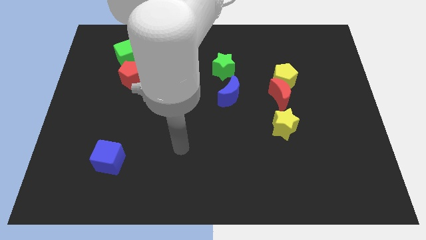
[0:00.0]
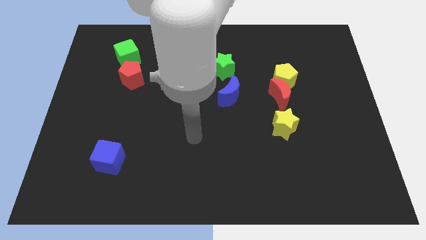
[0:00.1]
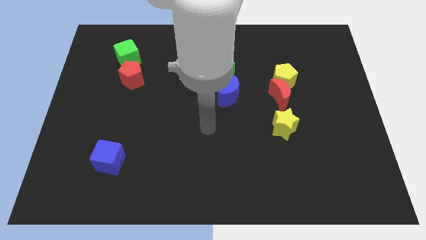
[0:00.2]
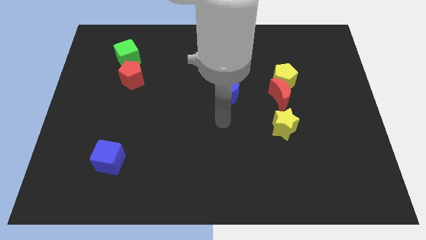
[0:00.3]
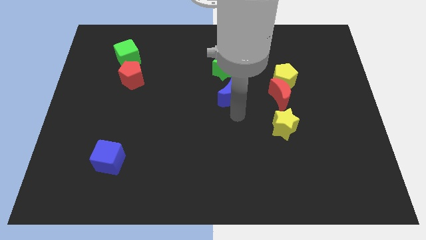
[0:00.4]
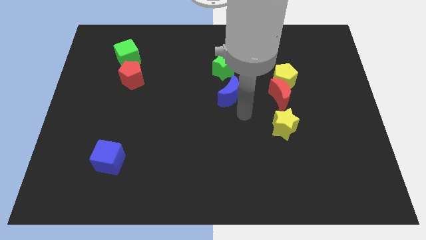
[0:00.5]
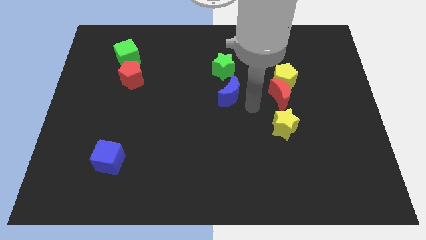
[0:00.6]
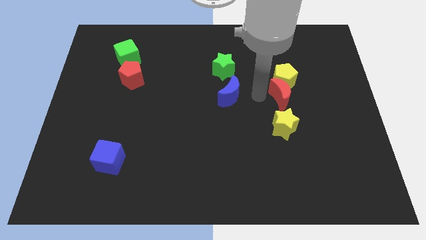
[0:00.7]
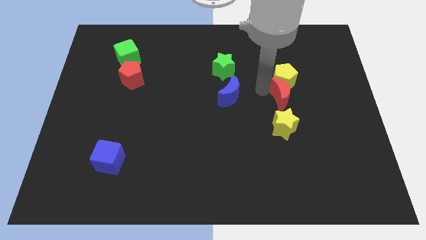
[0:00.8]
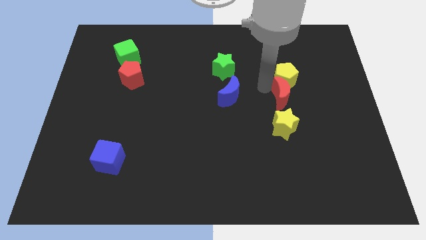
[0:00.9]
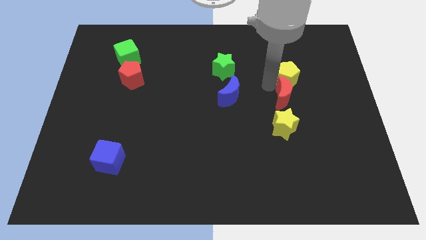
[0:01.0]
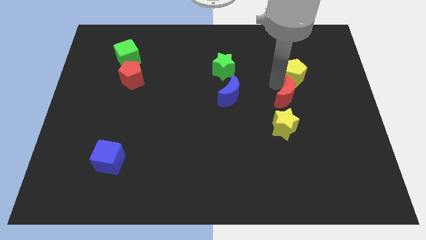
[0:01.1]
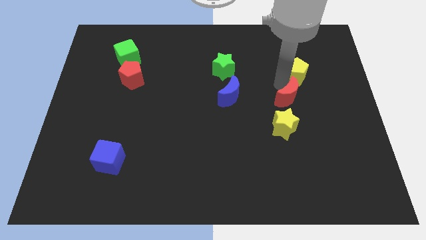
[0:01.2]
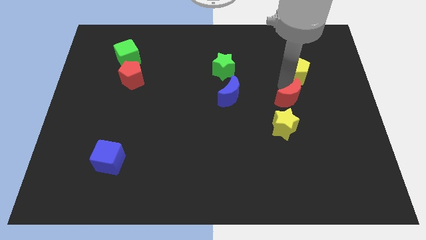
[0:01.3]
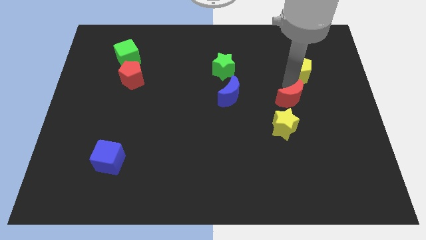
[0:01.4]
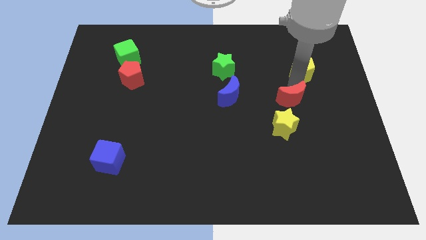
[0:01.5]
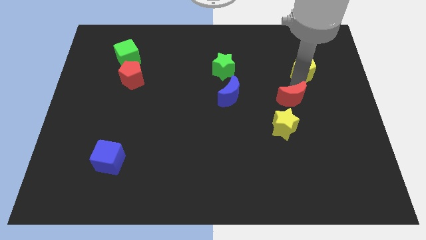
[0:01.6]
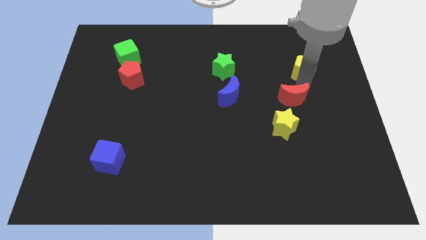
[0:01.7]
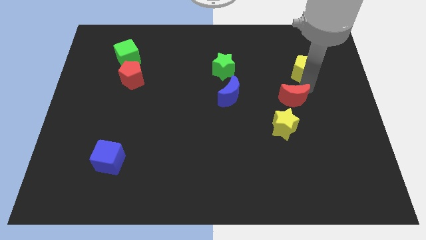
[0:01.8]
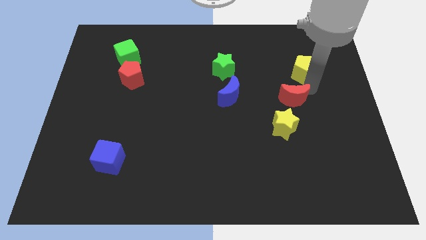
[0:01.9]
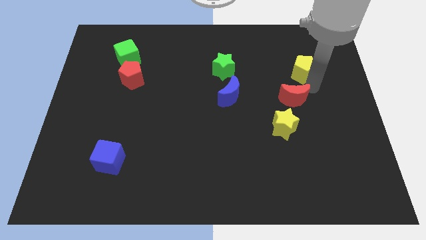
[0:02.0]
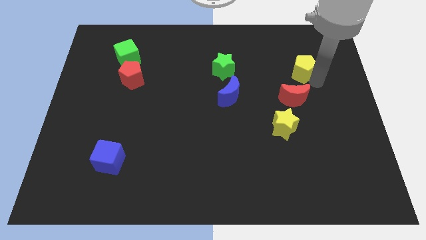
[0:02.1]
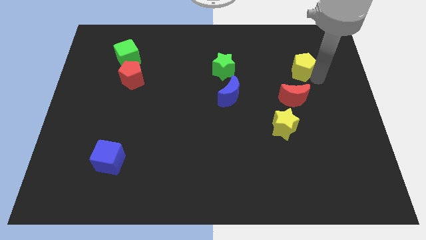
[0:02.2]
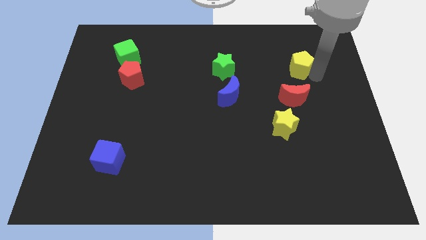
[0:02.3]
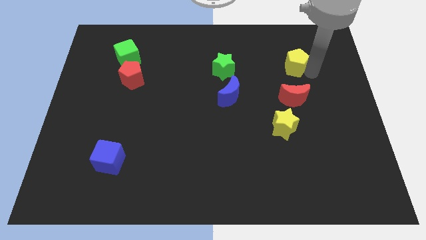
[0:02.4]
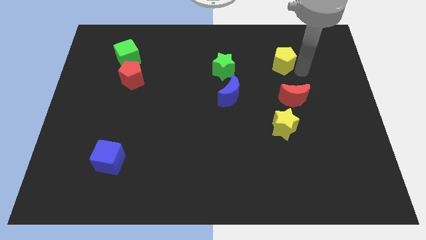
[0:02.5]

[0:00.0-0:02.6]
separate yellow pentagon and red moon

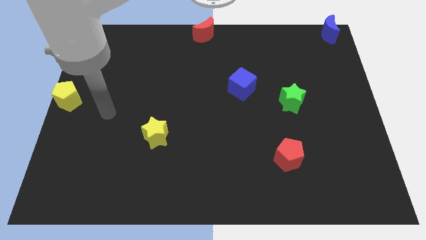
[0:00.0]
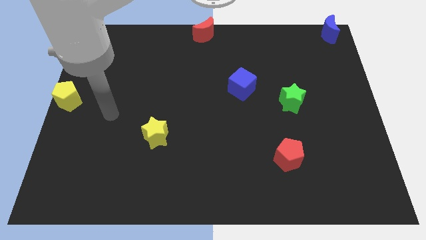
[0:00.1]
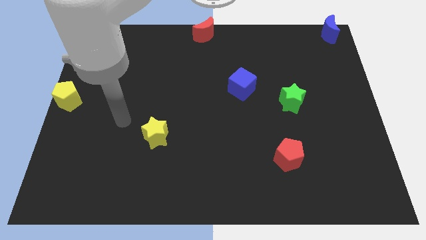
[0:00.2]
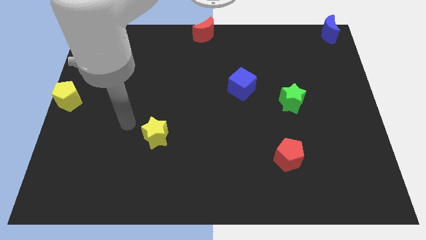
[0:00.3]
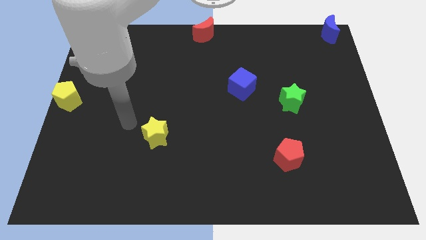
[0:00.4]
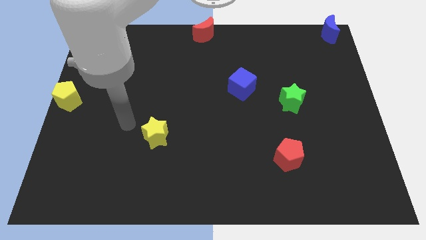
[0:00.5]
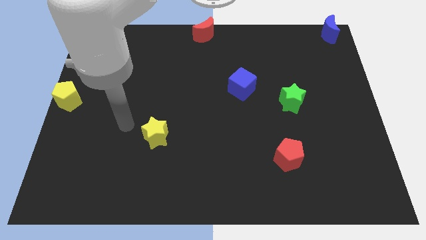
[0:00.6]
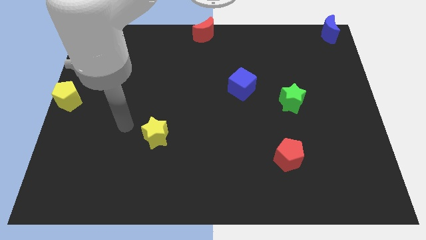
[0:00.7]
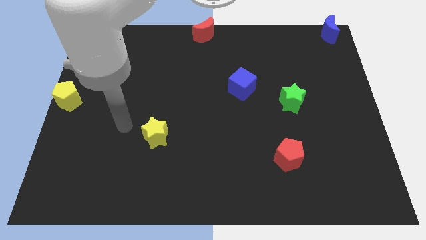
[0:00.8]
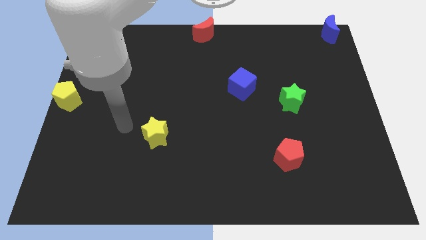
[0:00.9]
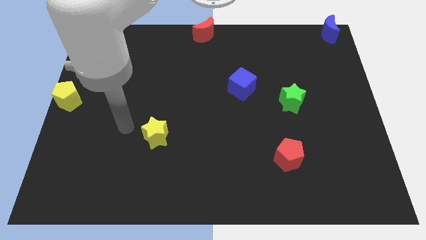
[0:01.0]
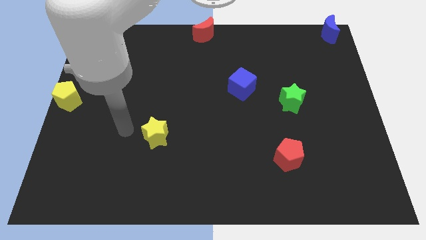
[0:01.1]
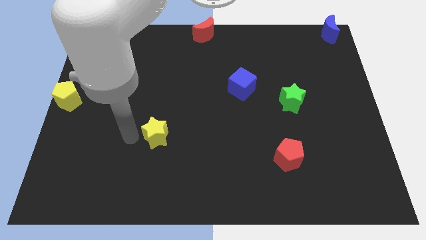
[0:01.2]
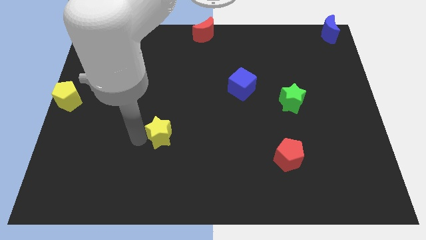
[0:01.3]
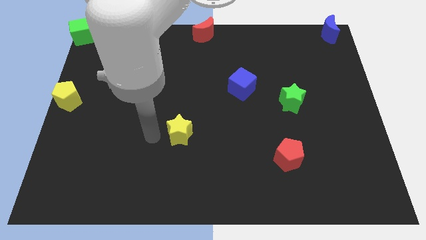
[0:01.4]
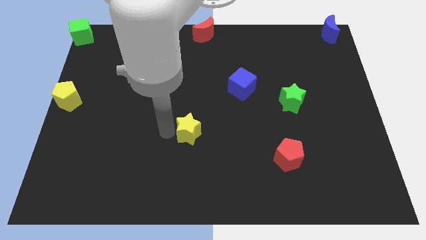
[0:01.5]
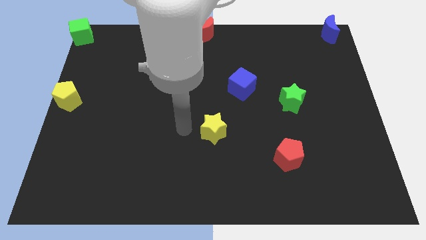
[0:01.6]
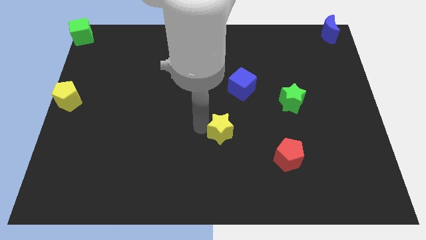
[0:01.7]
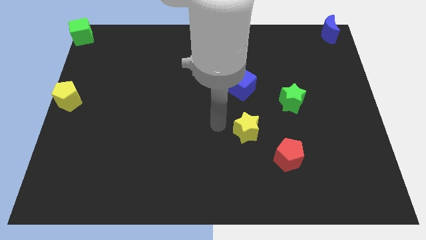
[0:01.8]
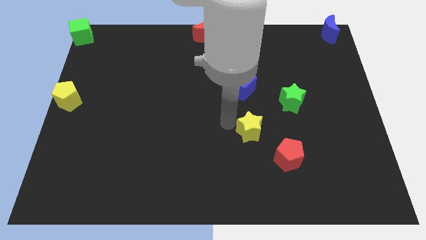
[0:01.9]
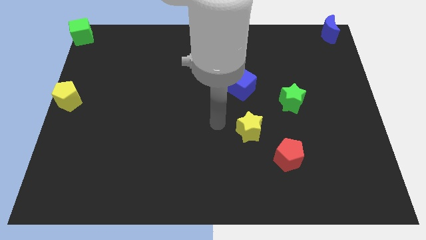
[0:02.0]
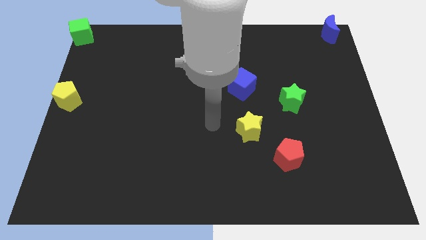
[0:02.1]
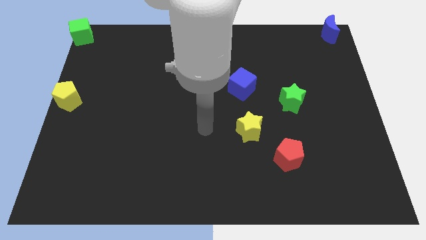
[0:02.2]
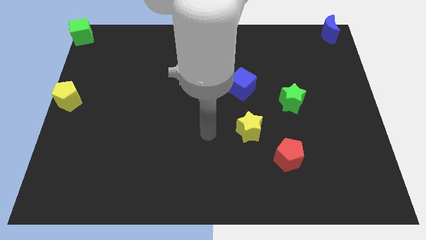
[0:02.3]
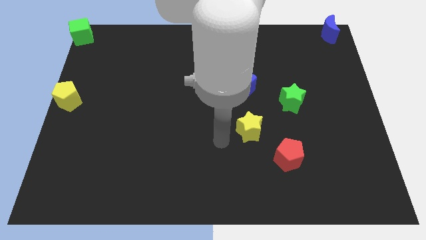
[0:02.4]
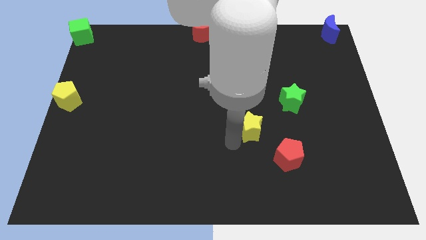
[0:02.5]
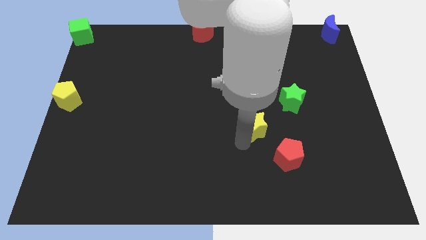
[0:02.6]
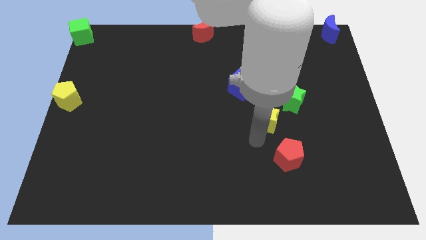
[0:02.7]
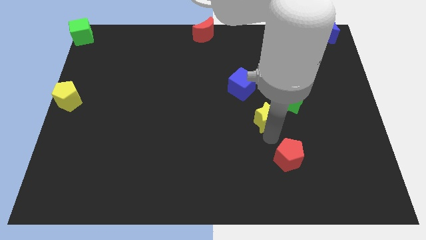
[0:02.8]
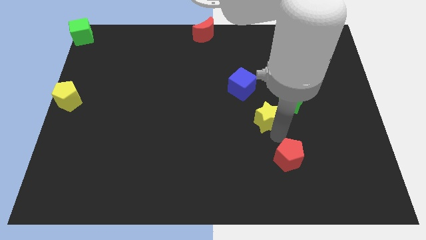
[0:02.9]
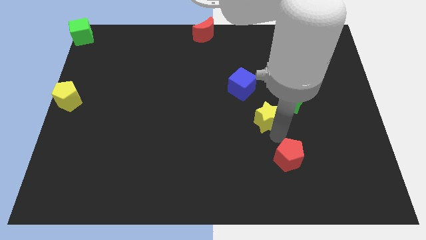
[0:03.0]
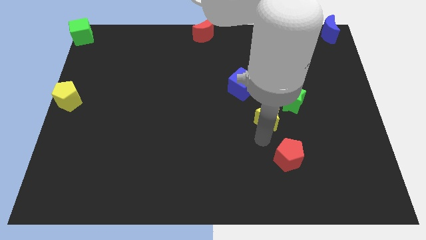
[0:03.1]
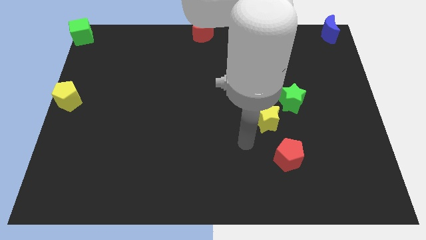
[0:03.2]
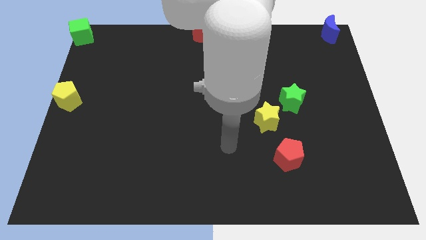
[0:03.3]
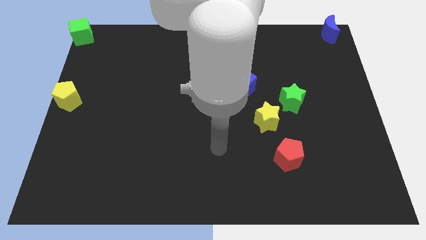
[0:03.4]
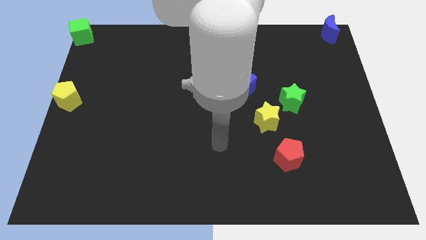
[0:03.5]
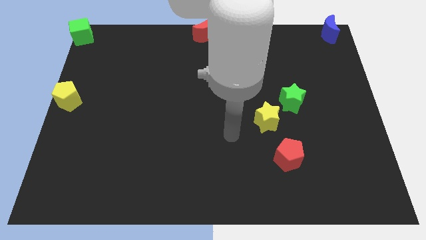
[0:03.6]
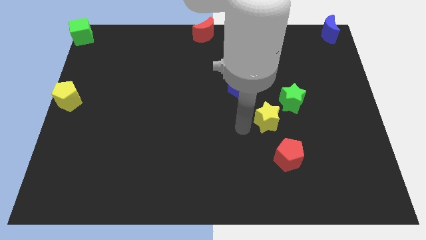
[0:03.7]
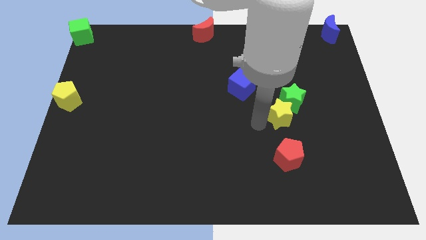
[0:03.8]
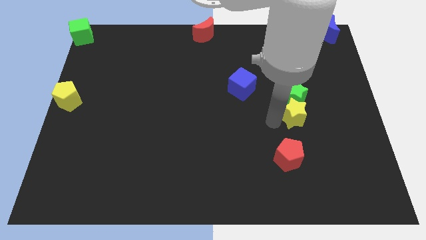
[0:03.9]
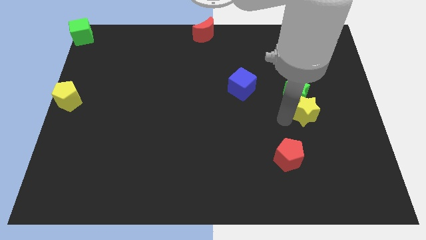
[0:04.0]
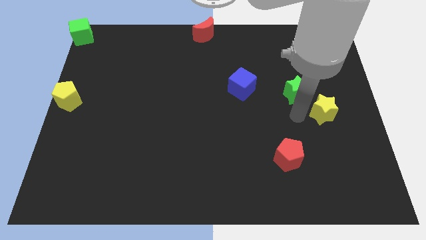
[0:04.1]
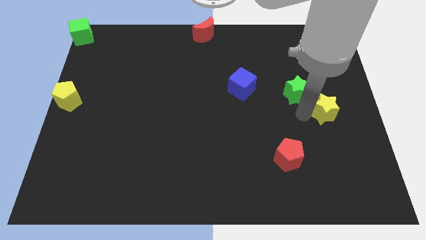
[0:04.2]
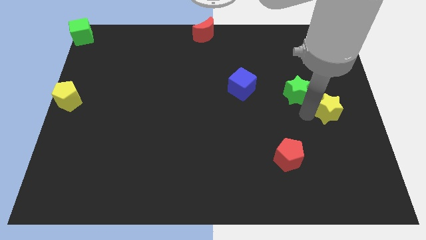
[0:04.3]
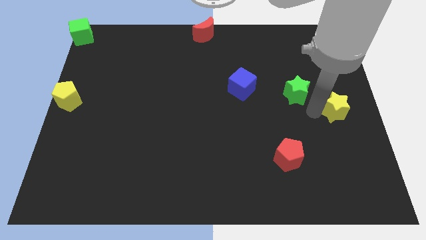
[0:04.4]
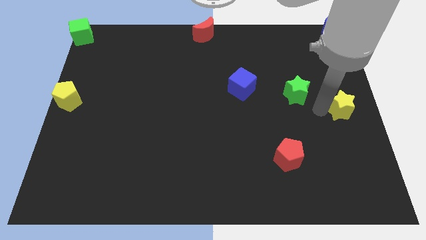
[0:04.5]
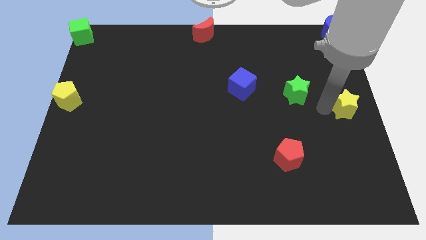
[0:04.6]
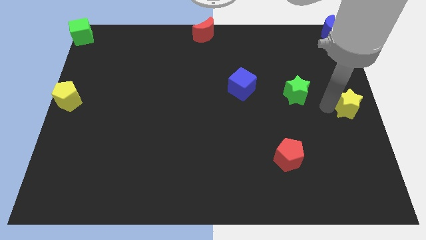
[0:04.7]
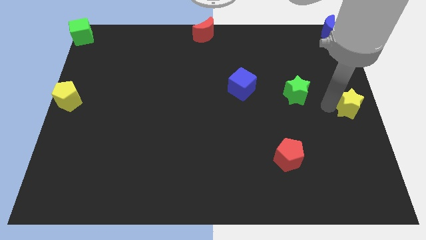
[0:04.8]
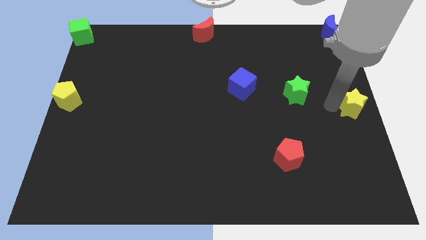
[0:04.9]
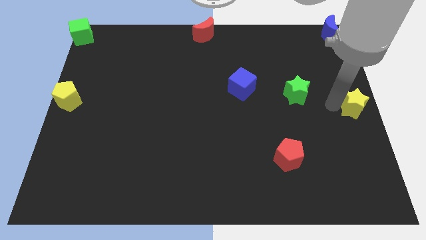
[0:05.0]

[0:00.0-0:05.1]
move the yellow star to the right middle of the board

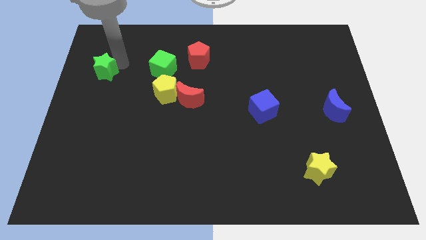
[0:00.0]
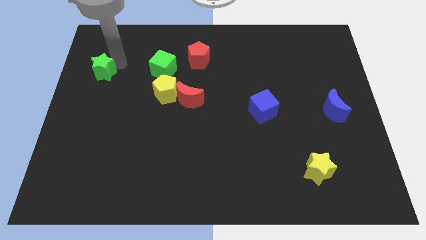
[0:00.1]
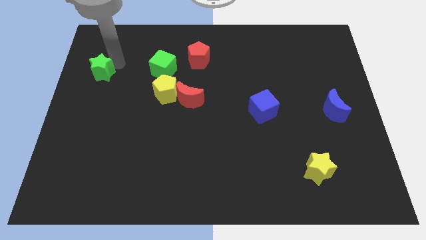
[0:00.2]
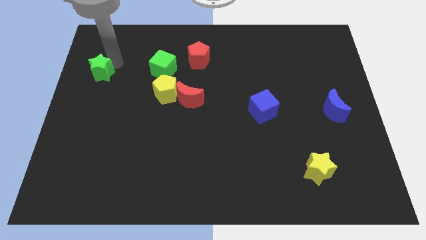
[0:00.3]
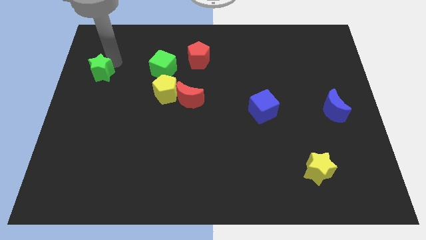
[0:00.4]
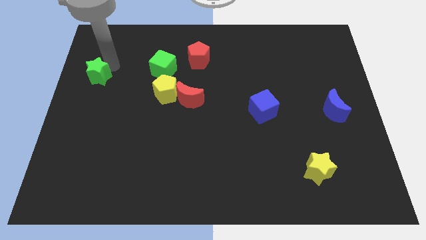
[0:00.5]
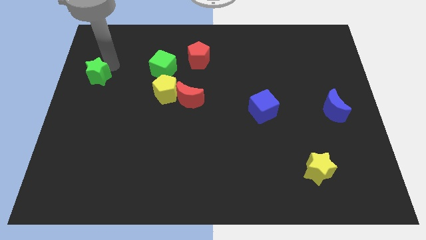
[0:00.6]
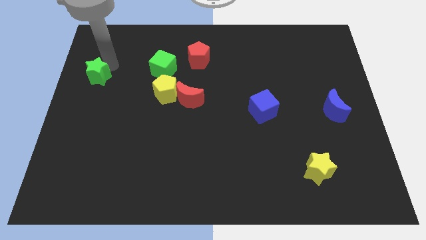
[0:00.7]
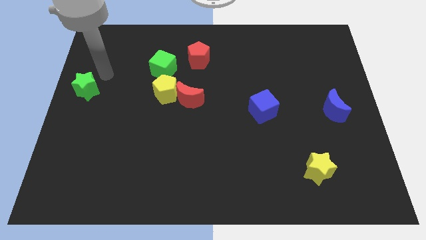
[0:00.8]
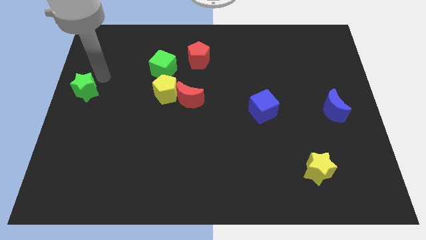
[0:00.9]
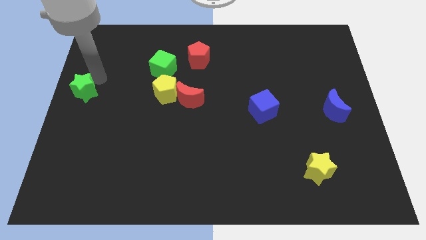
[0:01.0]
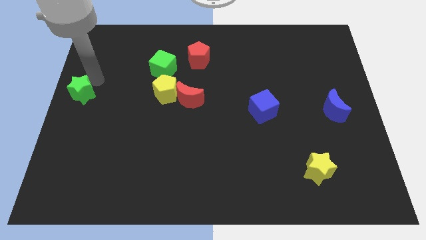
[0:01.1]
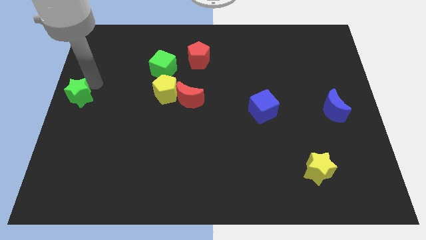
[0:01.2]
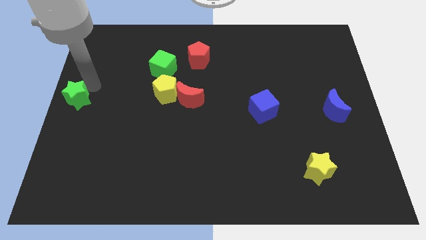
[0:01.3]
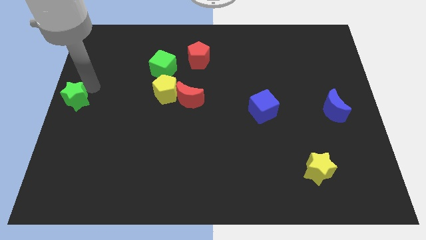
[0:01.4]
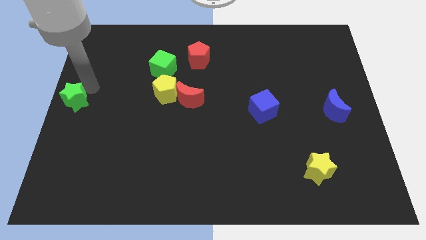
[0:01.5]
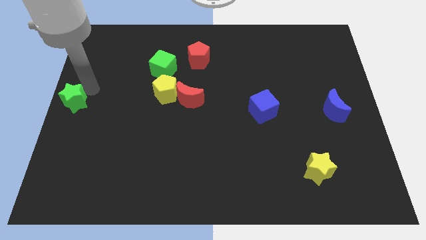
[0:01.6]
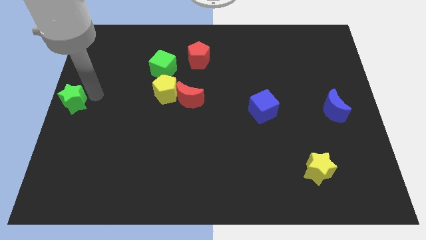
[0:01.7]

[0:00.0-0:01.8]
push the green star downwards
